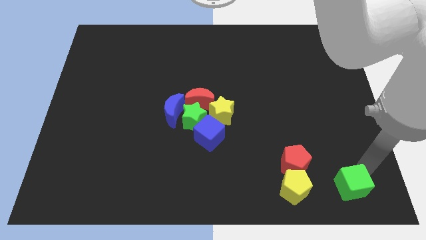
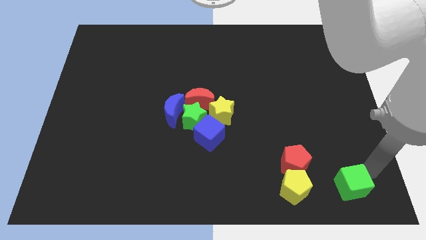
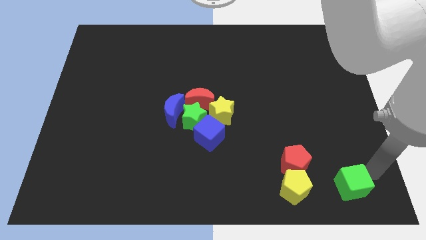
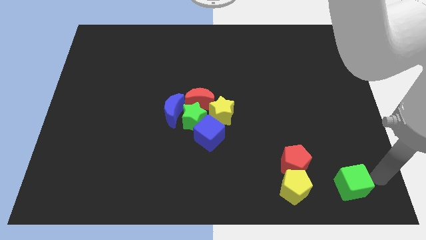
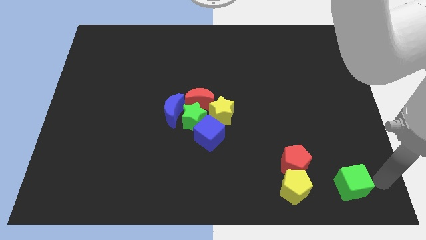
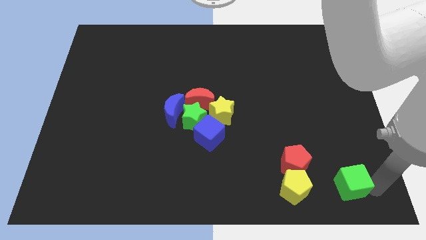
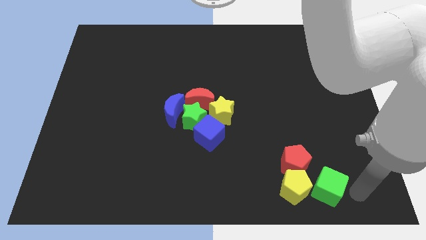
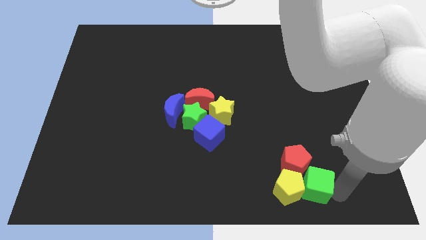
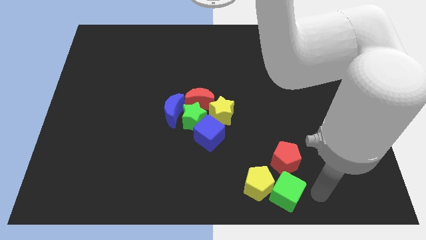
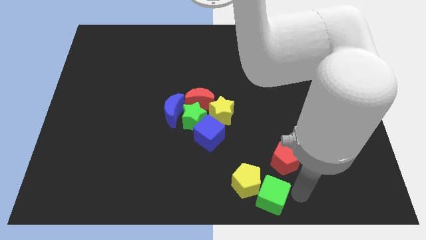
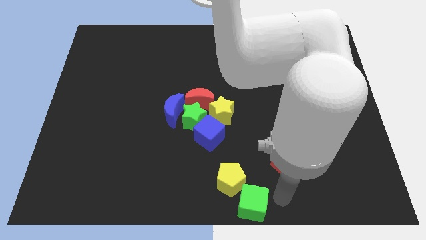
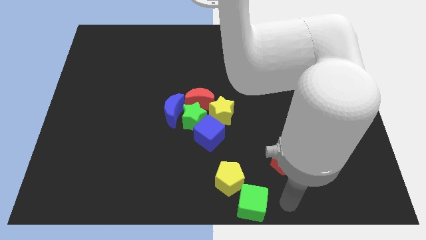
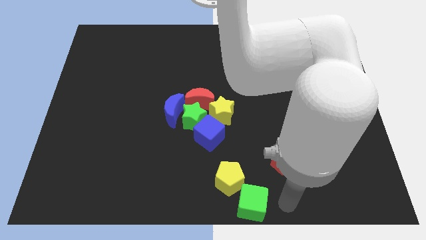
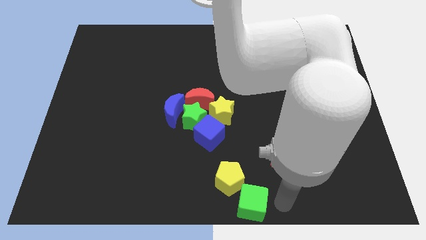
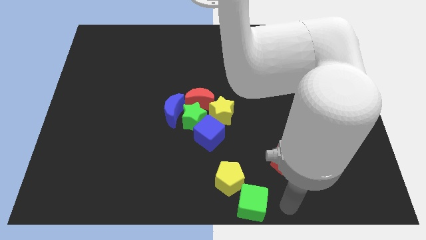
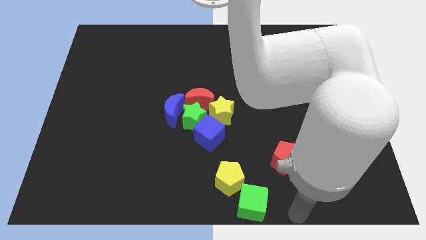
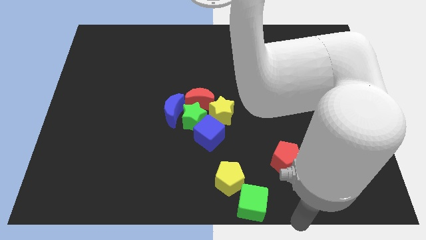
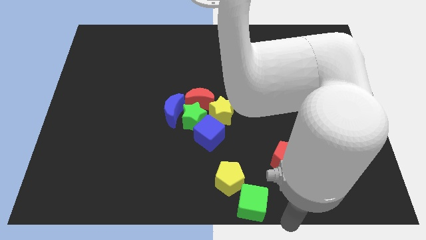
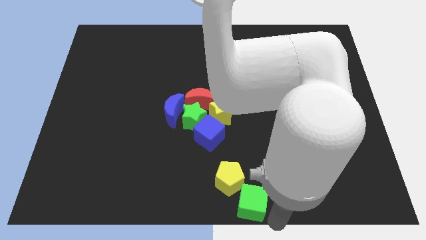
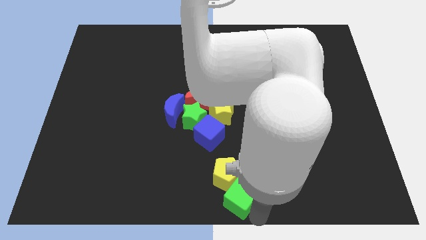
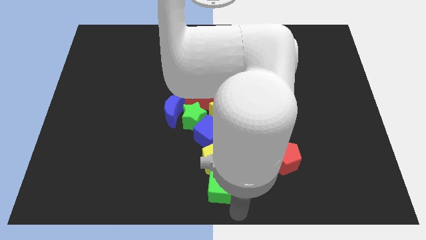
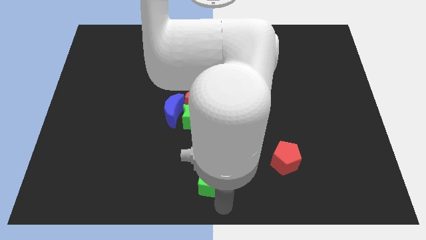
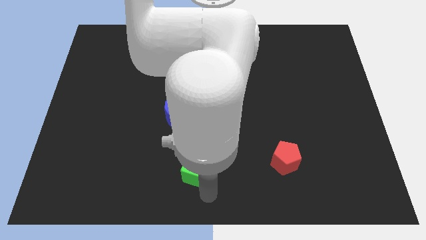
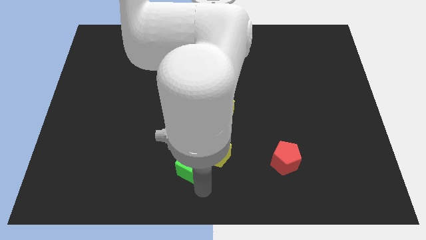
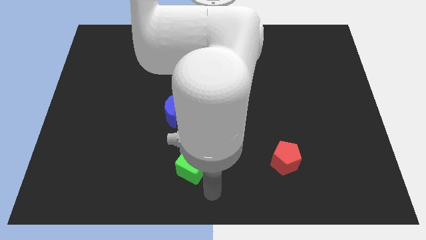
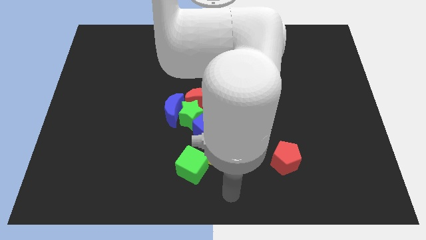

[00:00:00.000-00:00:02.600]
put the green cube and the yellow pentagon vertically below the group of blocks

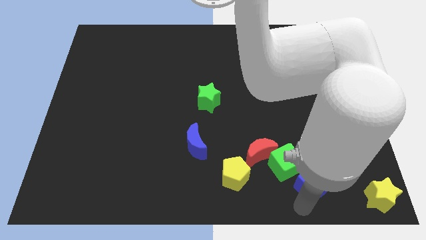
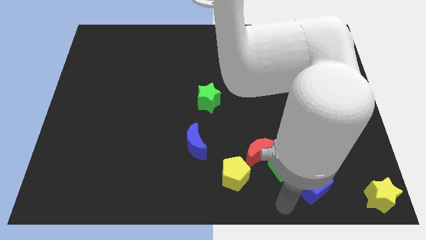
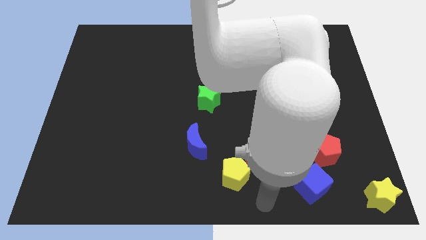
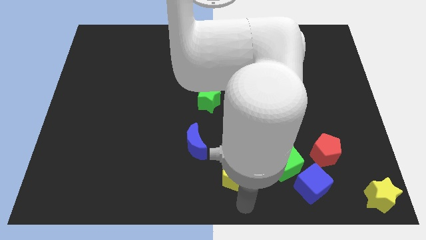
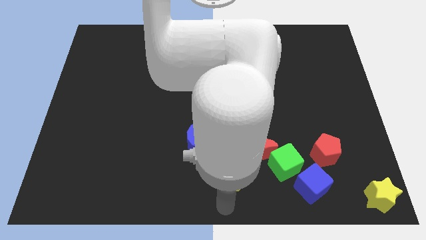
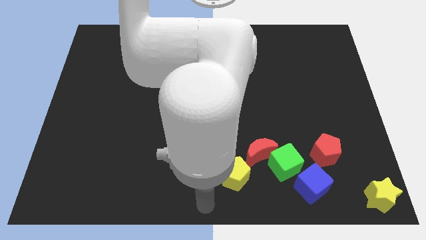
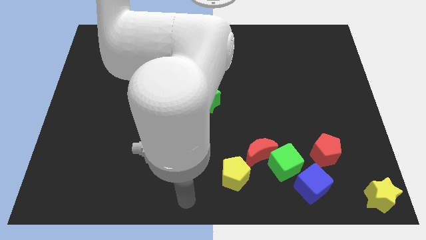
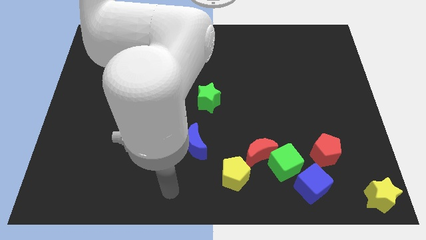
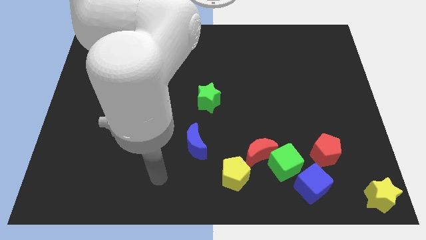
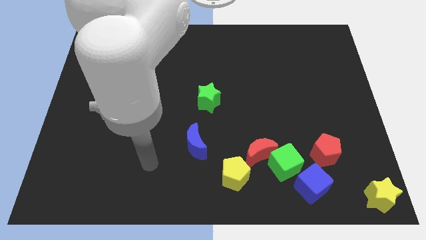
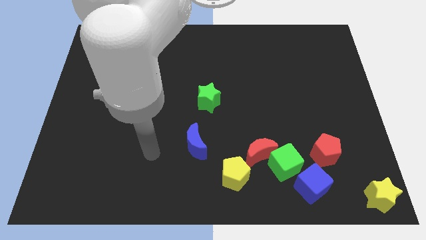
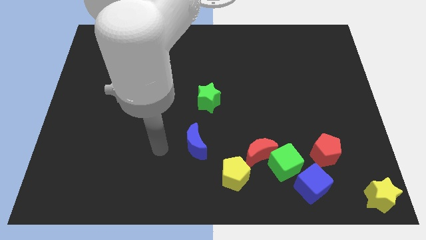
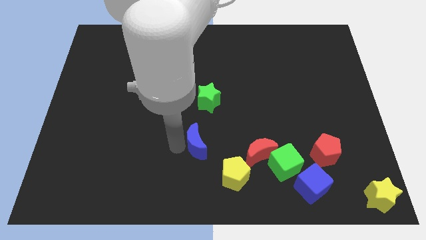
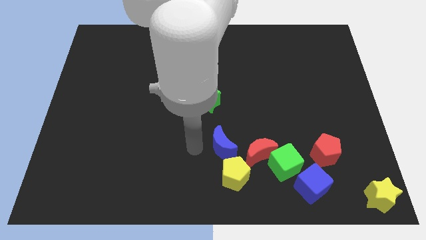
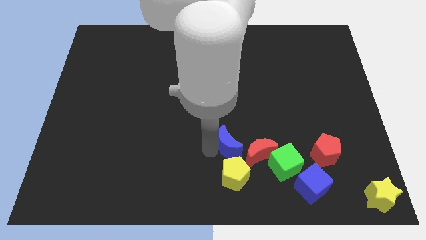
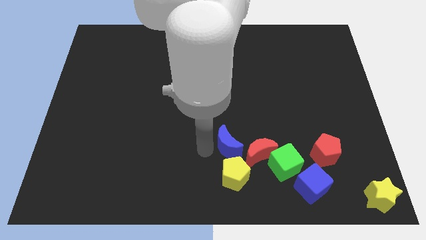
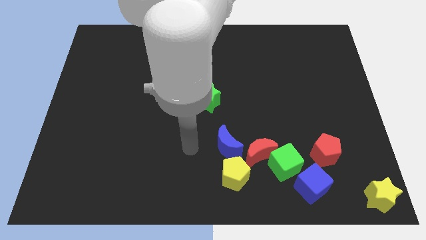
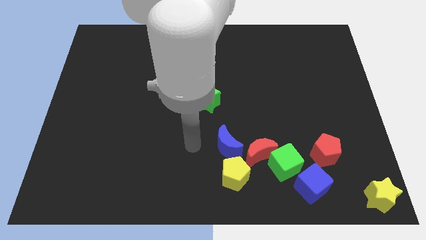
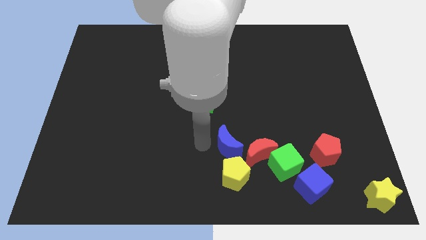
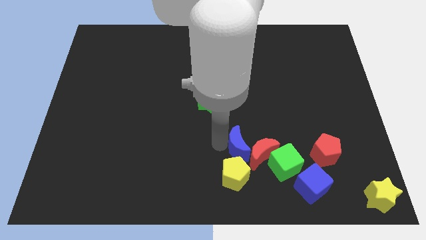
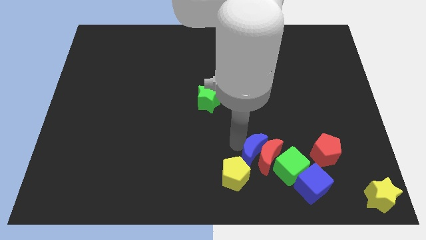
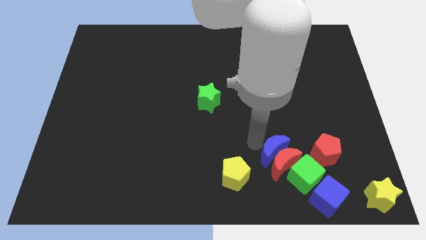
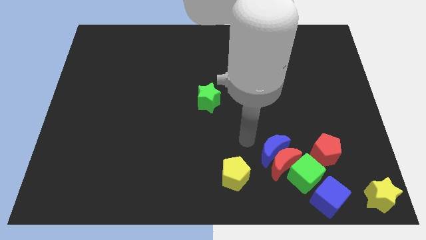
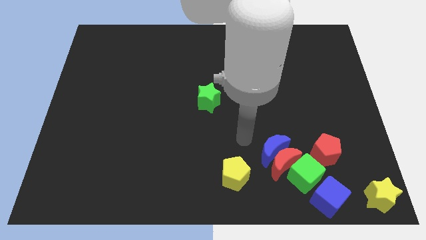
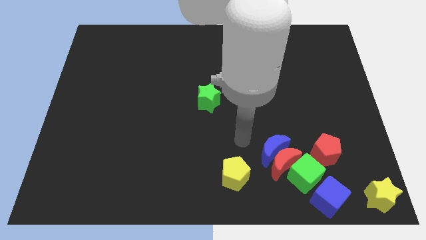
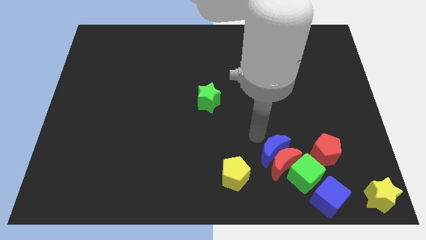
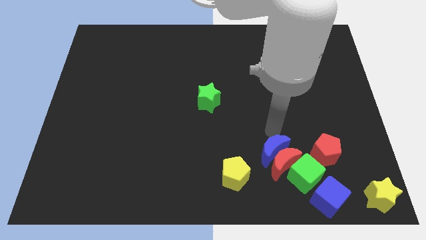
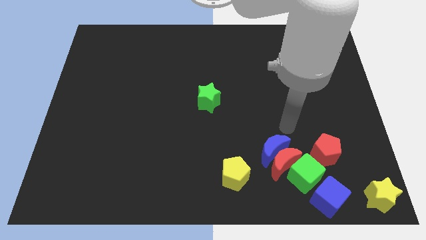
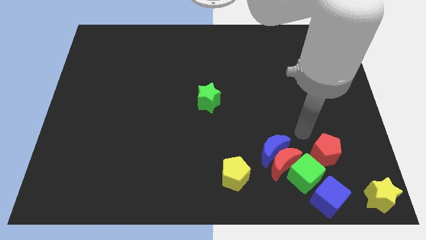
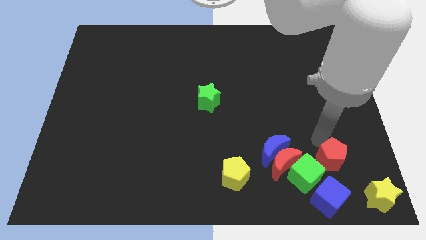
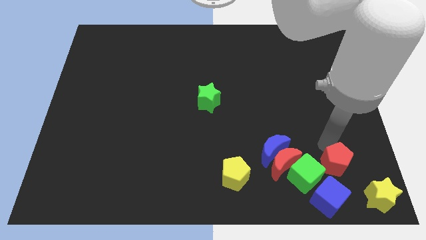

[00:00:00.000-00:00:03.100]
move the blue crescent to the group of blocks

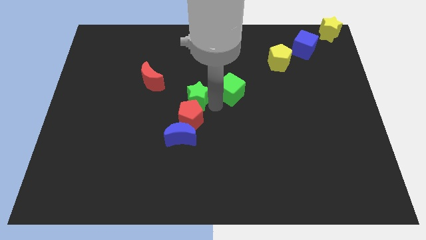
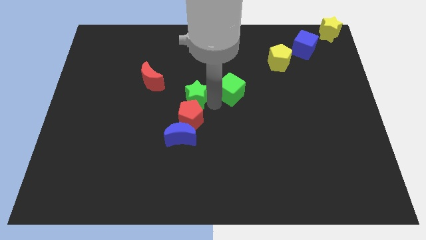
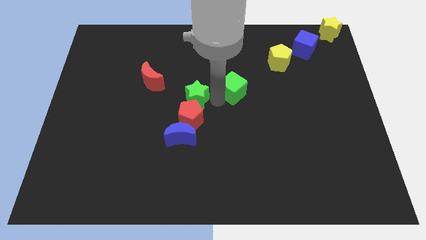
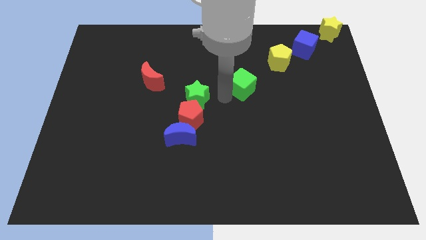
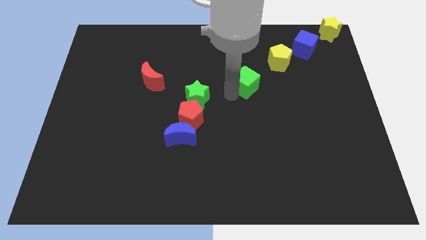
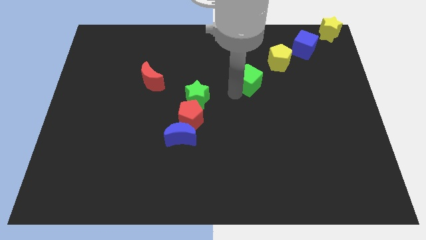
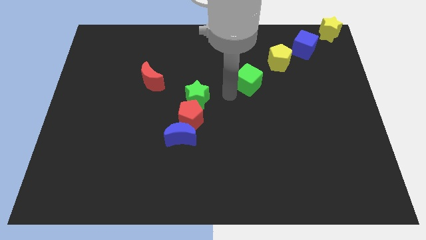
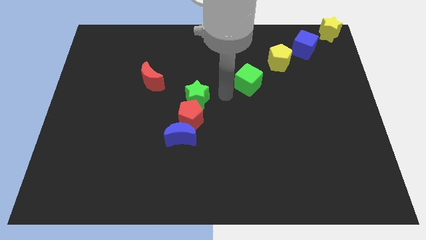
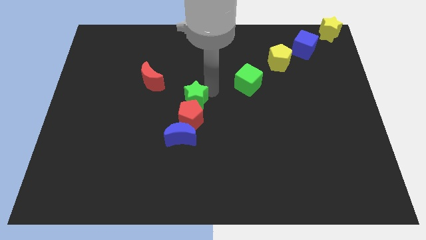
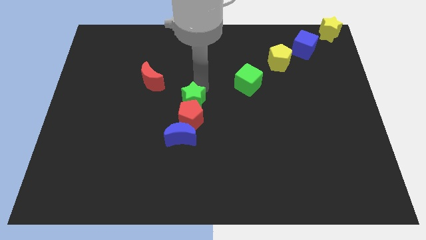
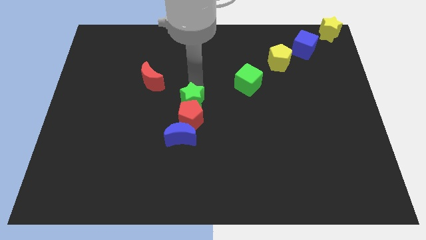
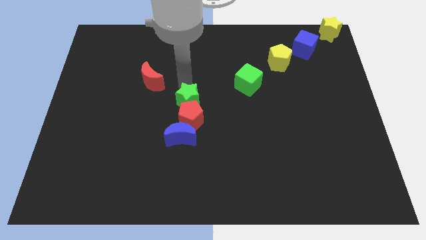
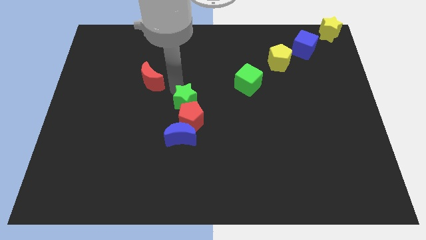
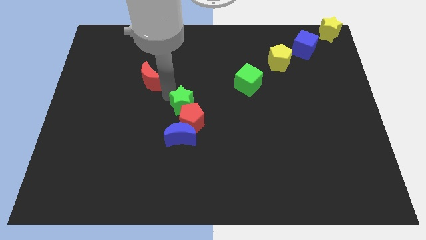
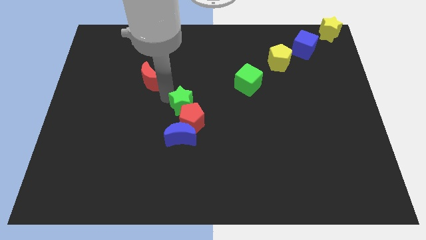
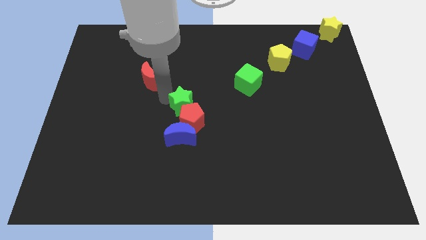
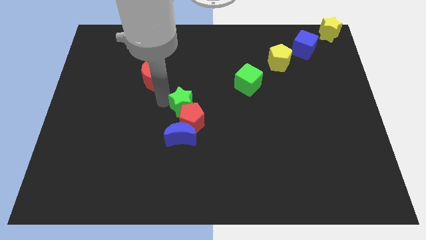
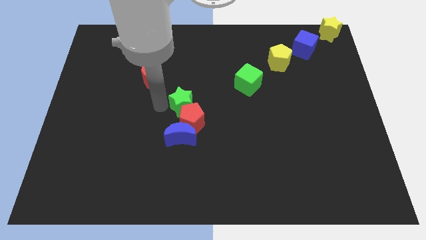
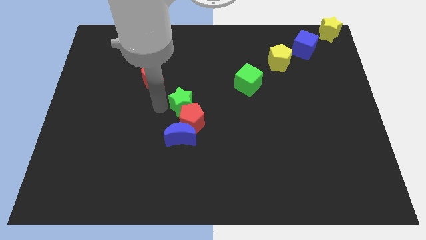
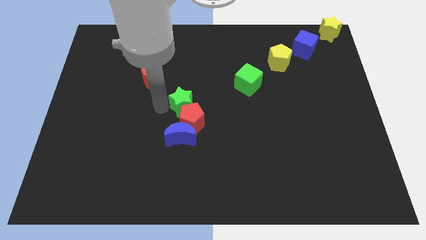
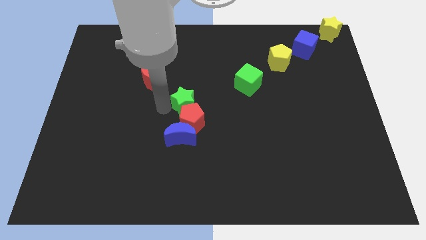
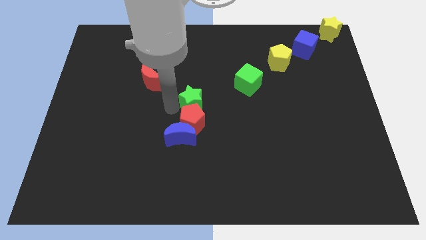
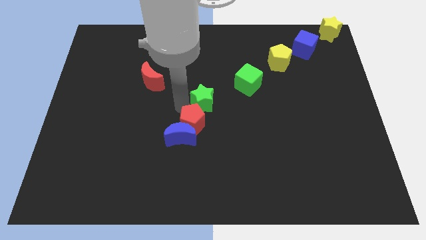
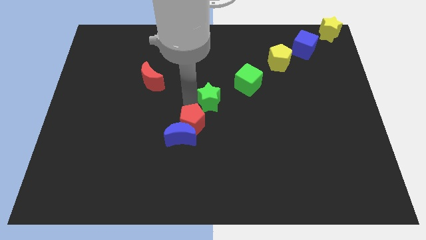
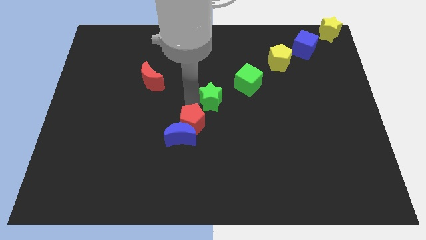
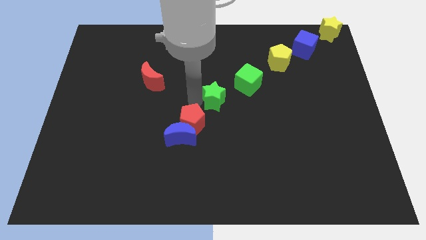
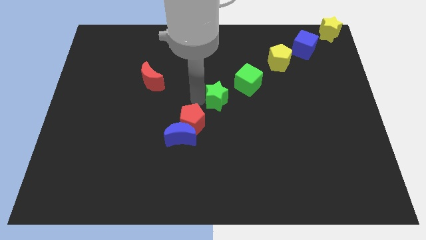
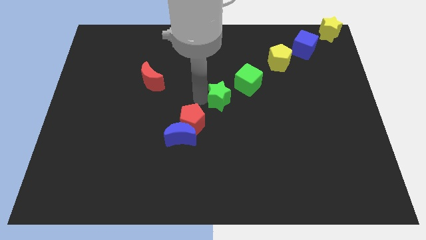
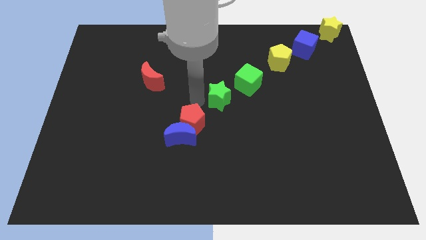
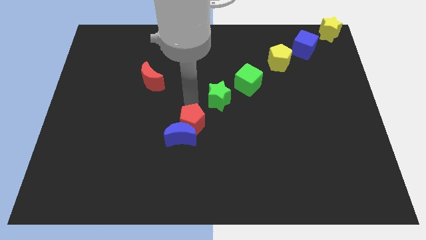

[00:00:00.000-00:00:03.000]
push green star diagonal towards green cube

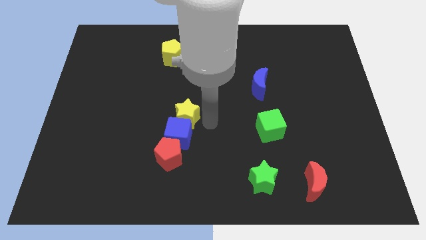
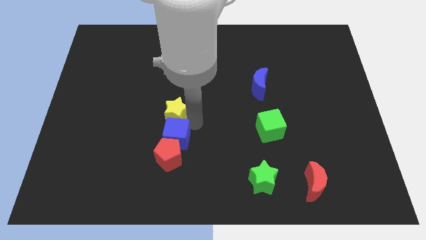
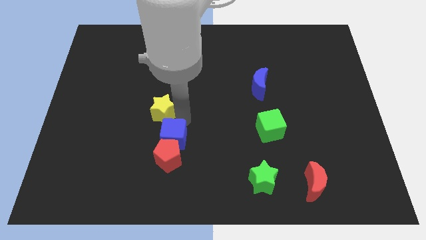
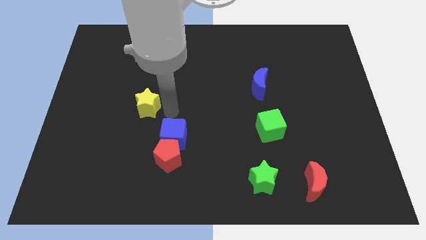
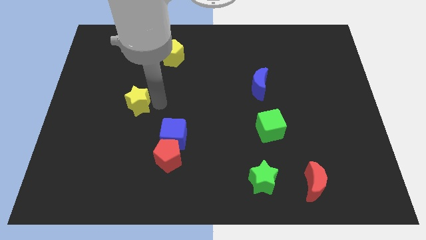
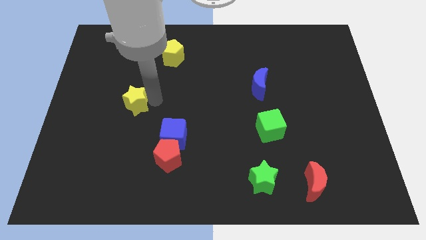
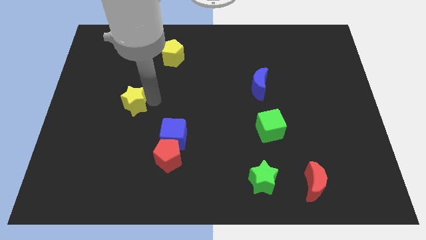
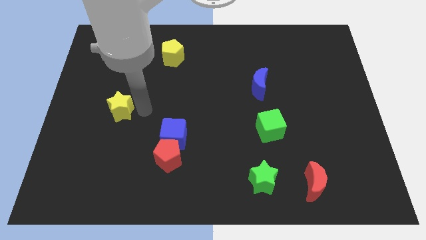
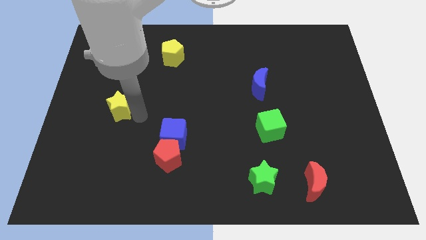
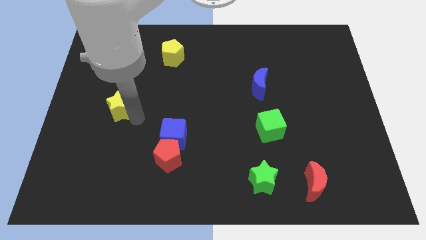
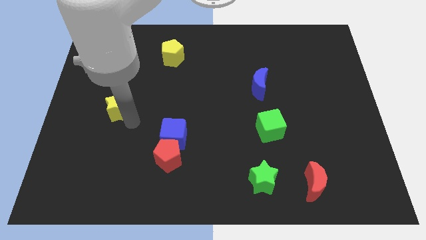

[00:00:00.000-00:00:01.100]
separate the yellow star from the blue cube
